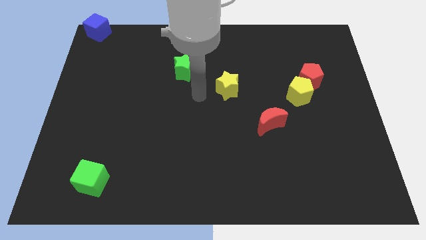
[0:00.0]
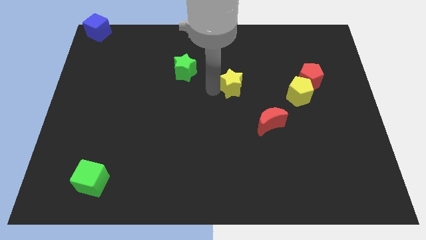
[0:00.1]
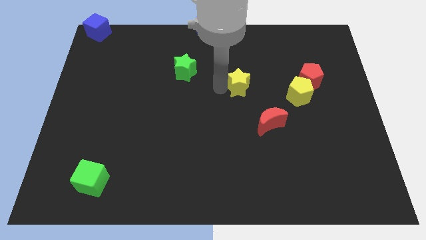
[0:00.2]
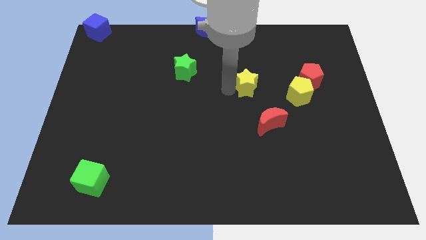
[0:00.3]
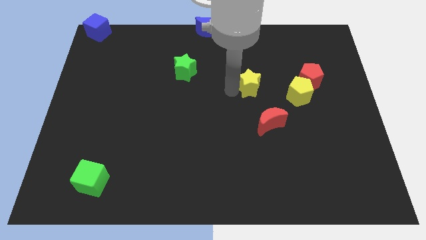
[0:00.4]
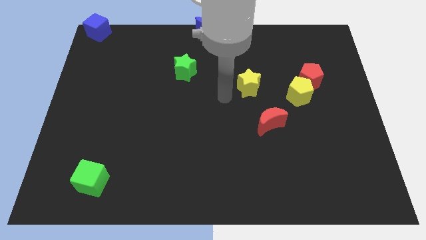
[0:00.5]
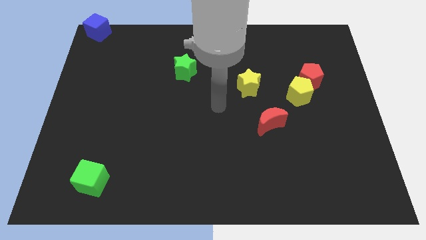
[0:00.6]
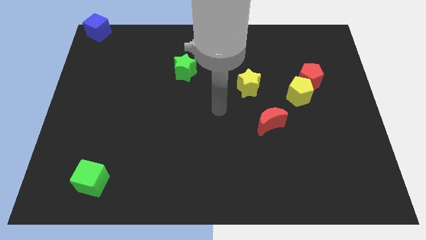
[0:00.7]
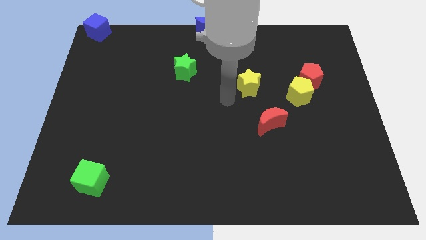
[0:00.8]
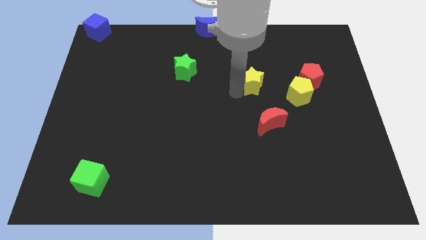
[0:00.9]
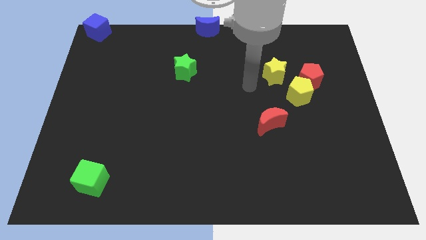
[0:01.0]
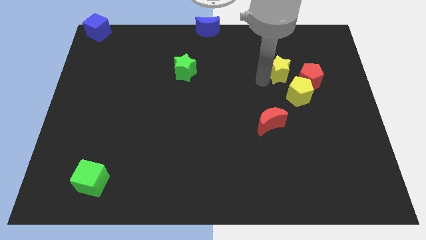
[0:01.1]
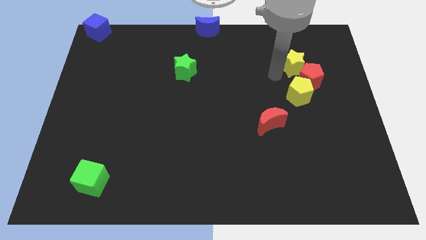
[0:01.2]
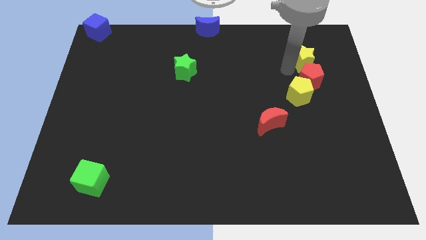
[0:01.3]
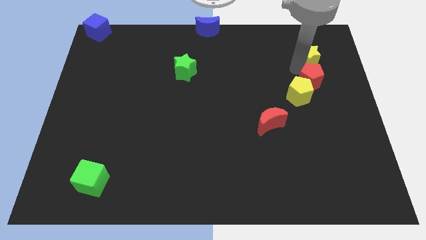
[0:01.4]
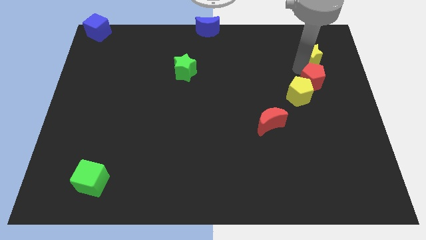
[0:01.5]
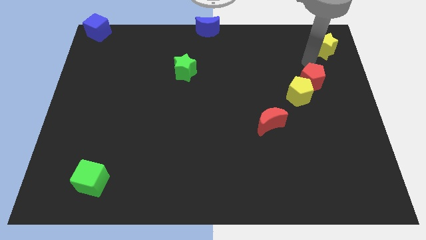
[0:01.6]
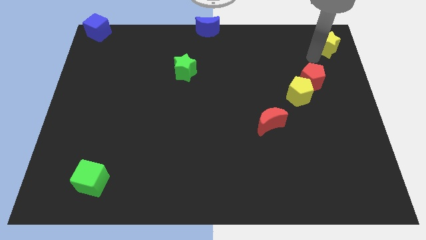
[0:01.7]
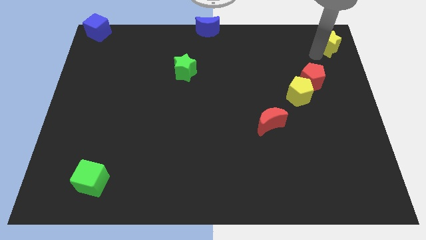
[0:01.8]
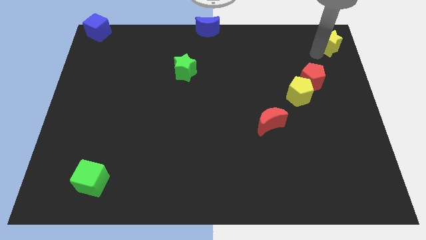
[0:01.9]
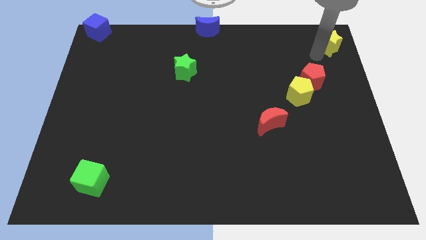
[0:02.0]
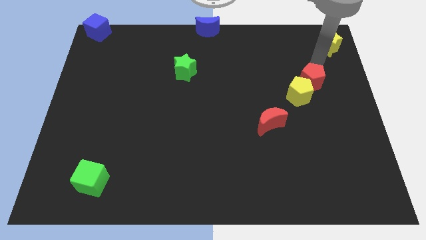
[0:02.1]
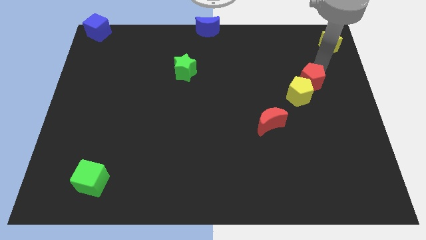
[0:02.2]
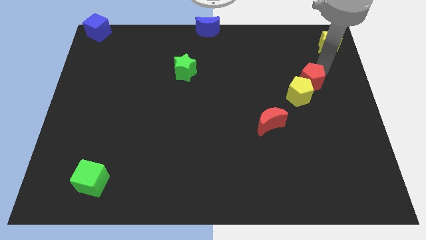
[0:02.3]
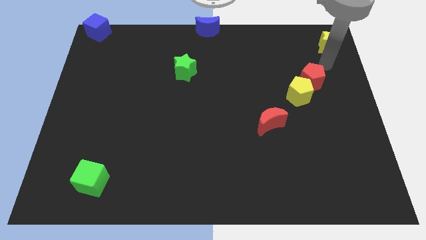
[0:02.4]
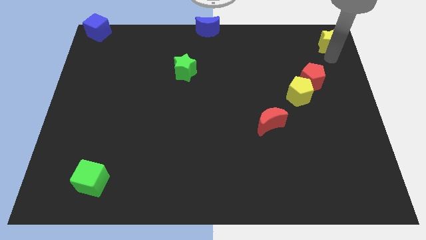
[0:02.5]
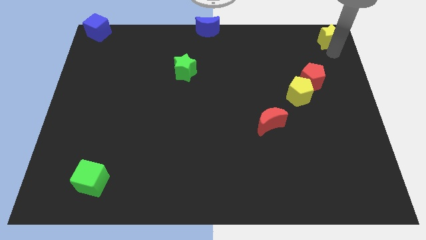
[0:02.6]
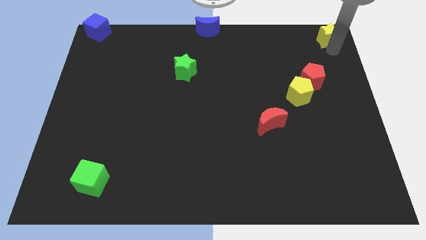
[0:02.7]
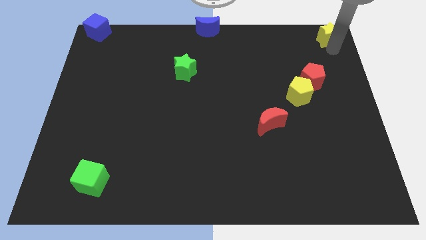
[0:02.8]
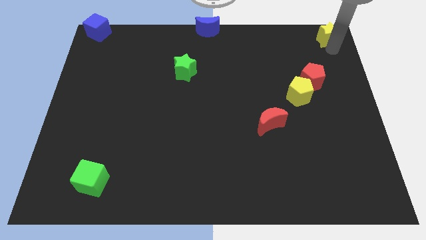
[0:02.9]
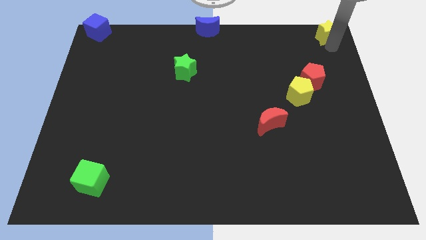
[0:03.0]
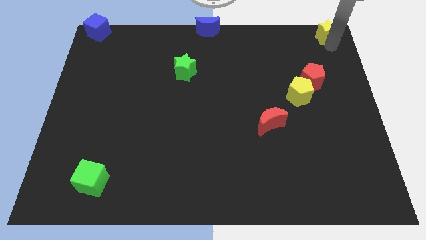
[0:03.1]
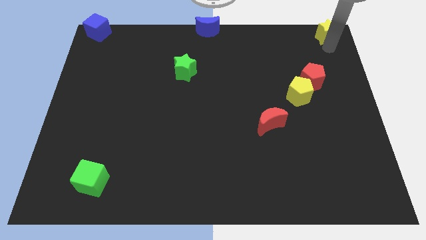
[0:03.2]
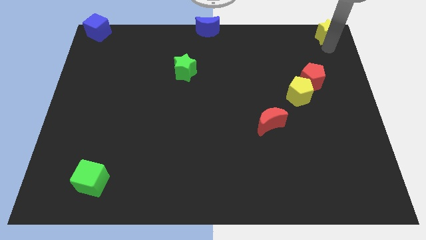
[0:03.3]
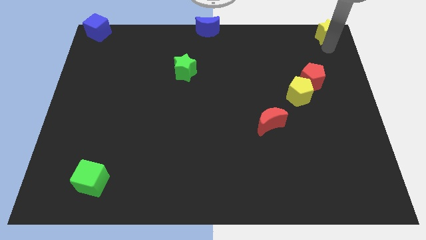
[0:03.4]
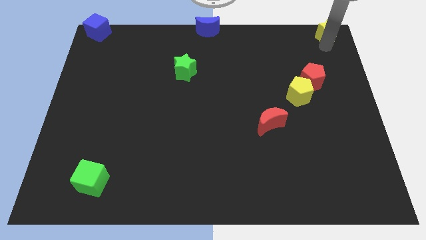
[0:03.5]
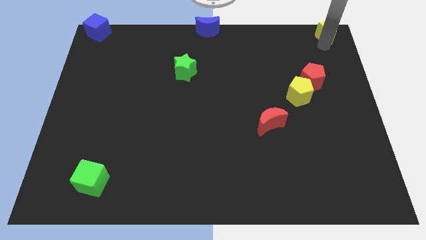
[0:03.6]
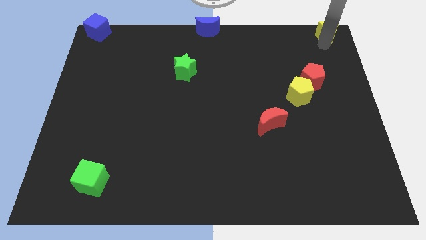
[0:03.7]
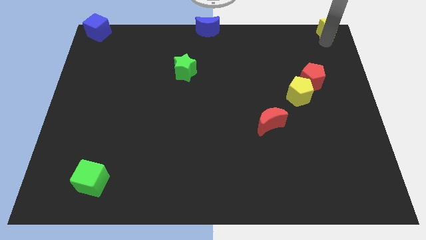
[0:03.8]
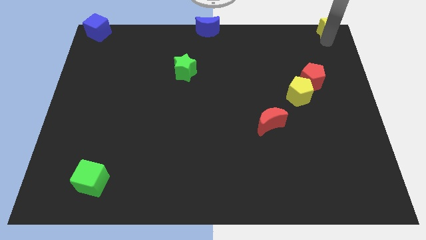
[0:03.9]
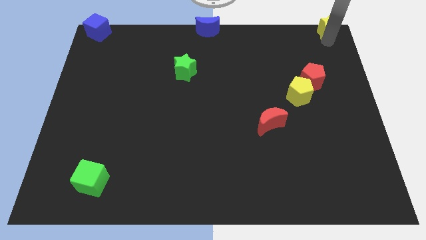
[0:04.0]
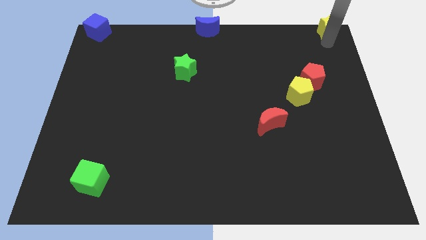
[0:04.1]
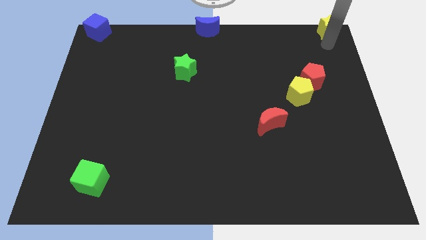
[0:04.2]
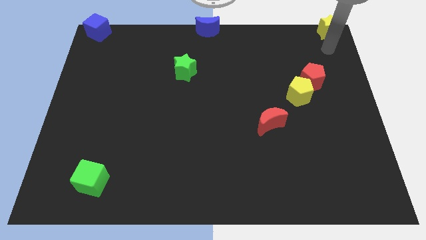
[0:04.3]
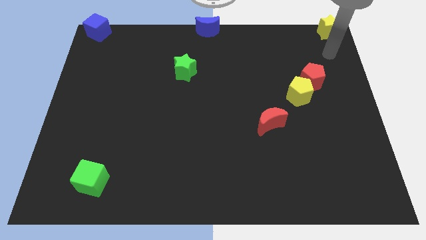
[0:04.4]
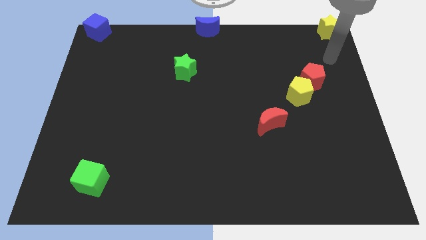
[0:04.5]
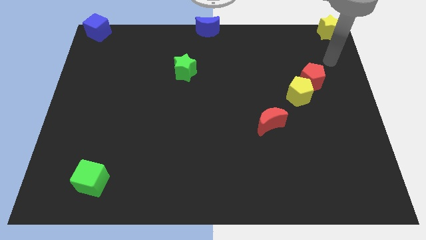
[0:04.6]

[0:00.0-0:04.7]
drag the yellow star to the top right side of the board

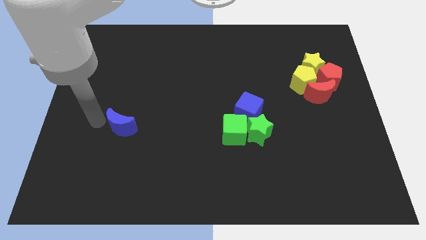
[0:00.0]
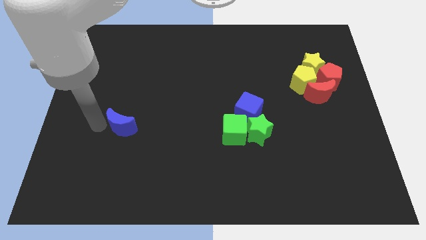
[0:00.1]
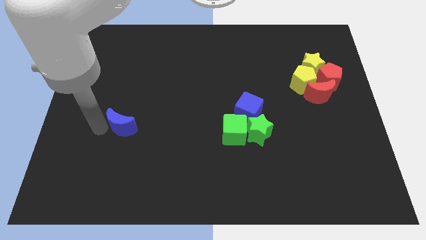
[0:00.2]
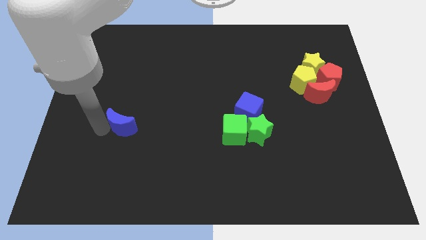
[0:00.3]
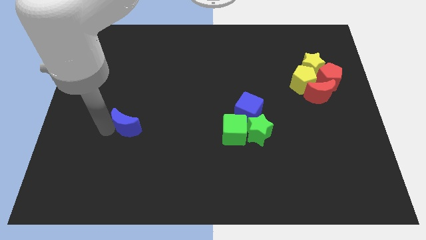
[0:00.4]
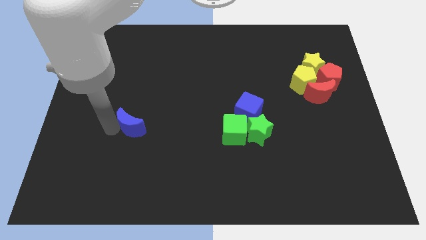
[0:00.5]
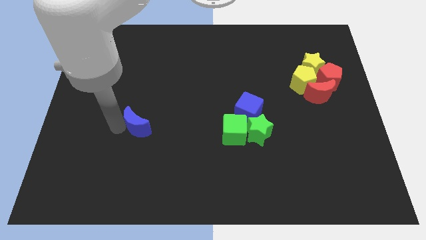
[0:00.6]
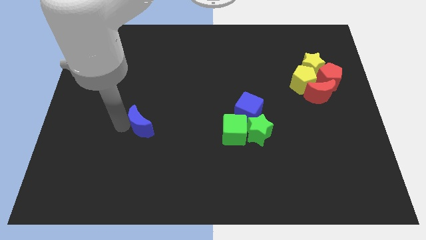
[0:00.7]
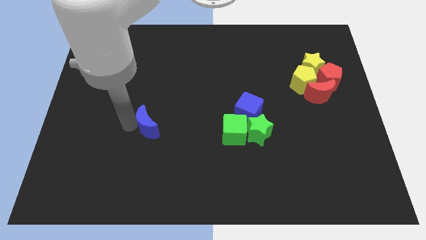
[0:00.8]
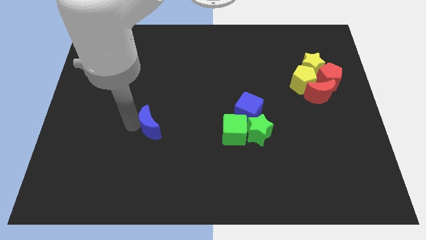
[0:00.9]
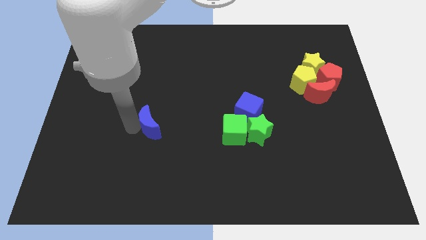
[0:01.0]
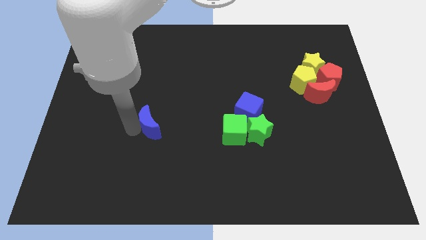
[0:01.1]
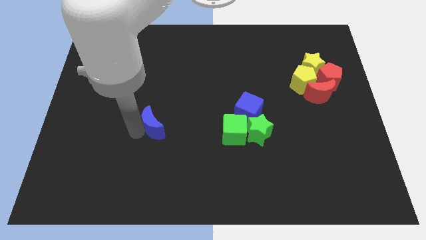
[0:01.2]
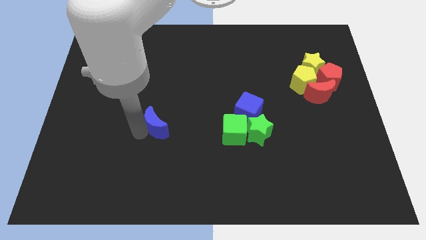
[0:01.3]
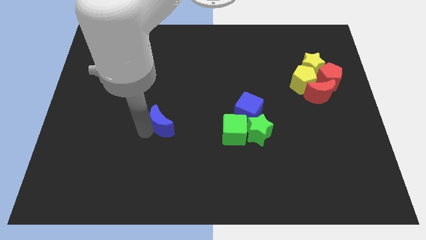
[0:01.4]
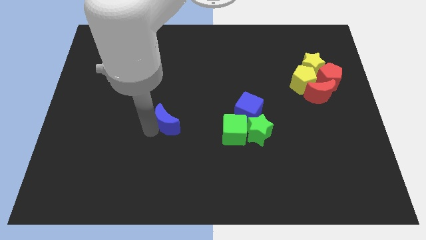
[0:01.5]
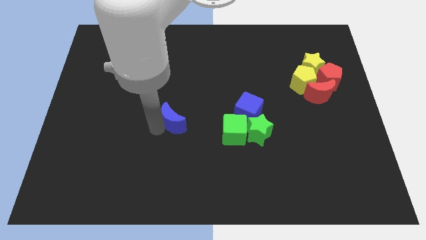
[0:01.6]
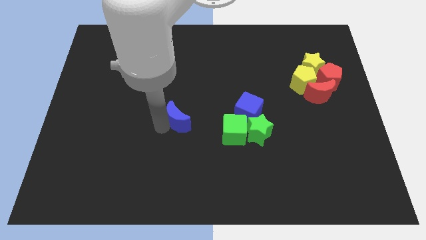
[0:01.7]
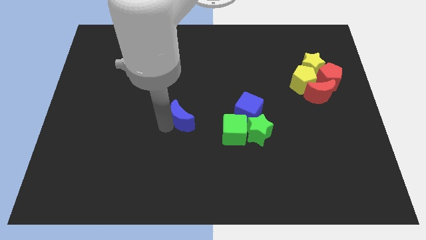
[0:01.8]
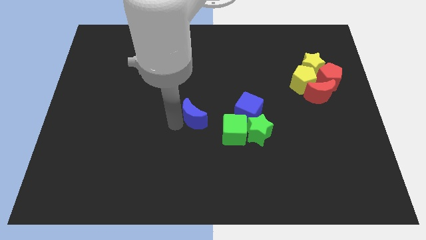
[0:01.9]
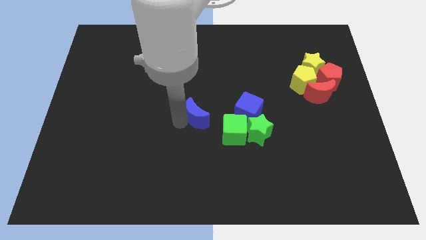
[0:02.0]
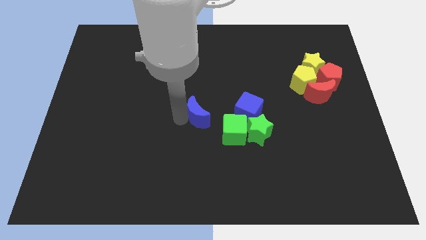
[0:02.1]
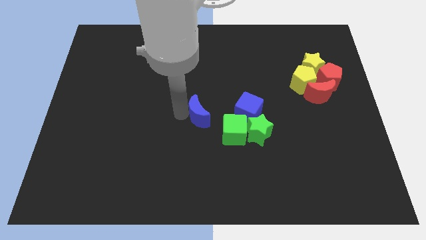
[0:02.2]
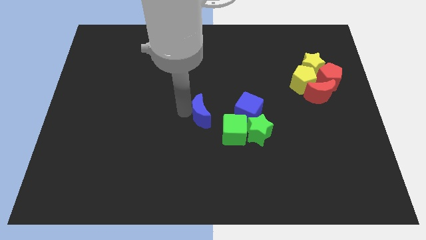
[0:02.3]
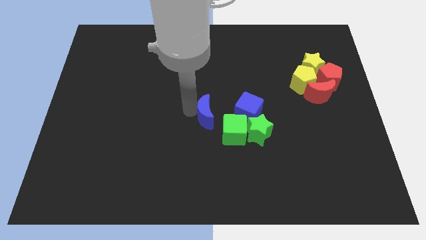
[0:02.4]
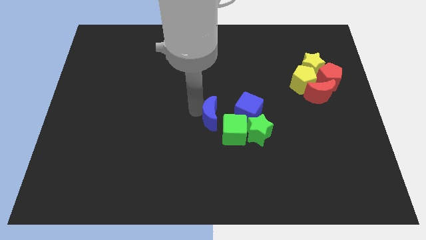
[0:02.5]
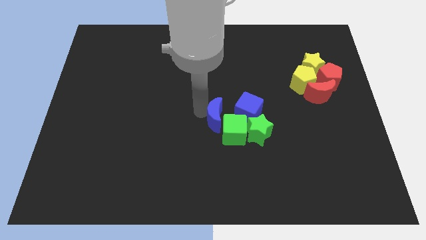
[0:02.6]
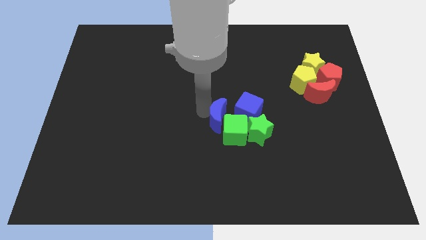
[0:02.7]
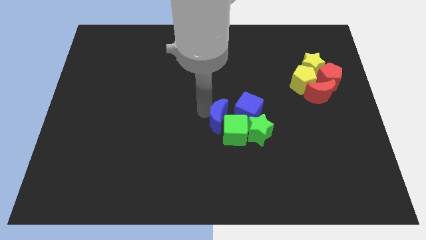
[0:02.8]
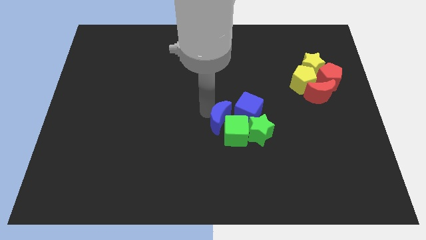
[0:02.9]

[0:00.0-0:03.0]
place blue moon towards green cube

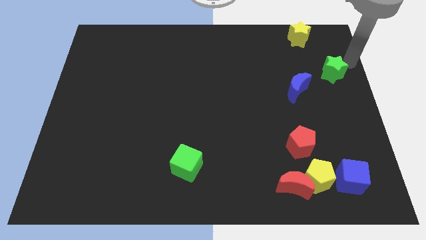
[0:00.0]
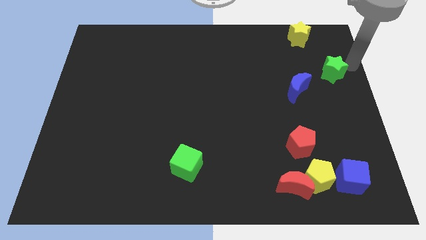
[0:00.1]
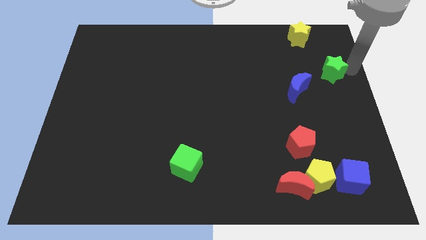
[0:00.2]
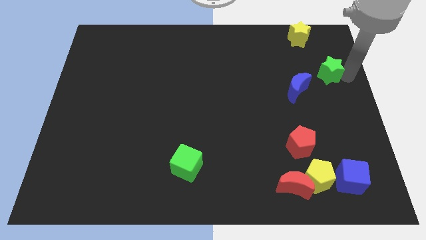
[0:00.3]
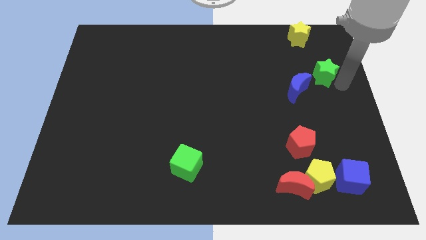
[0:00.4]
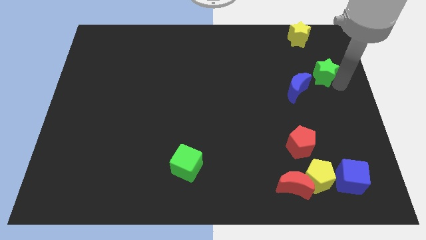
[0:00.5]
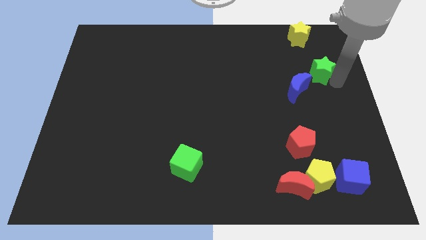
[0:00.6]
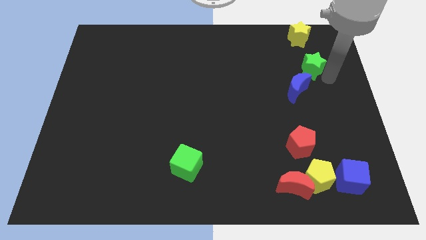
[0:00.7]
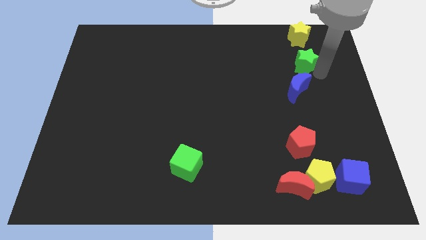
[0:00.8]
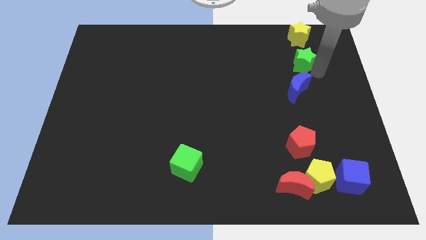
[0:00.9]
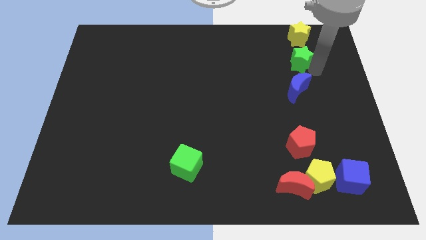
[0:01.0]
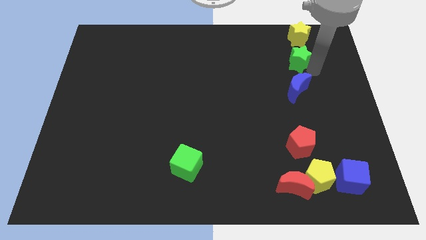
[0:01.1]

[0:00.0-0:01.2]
push green star diagonally top

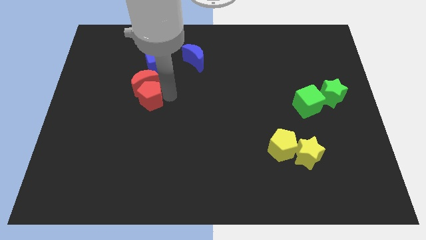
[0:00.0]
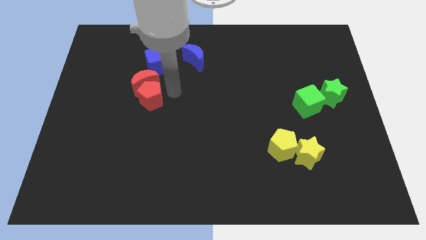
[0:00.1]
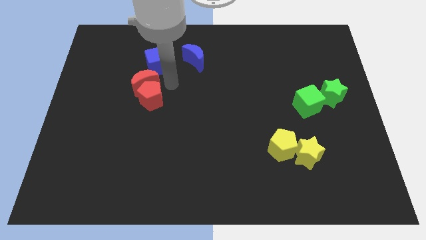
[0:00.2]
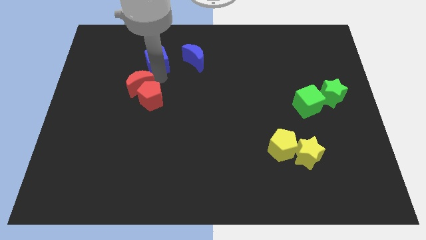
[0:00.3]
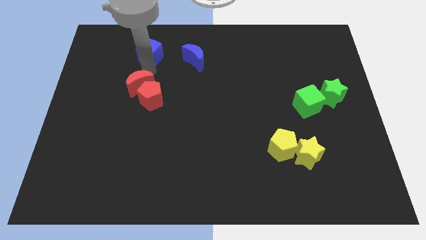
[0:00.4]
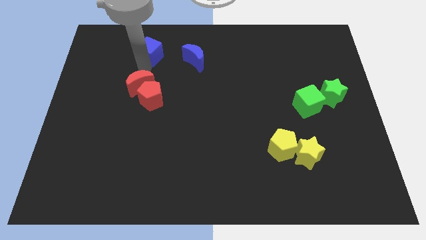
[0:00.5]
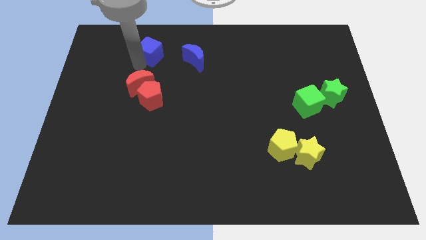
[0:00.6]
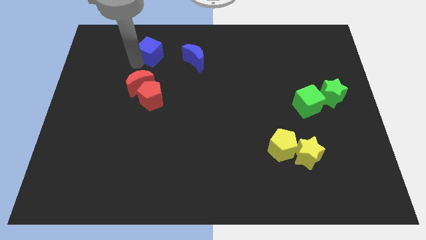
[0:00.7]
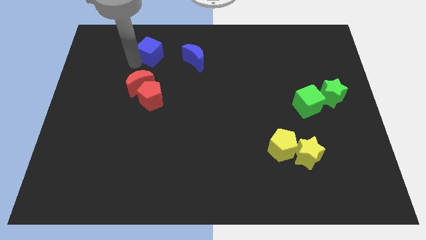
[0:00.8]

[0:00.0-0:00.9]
push blue cube slightly towards upwards
